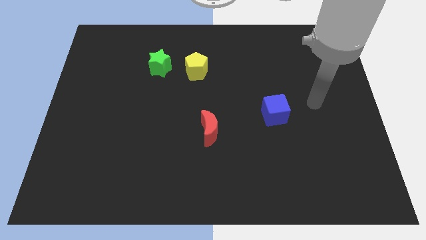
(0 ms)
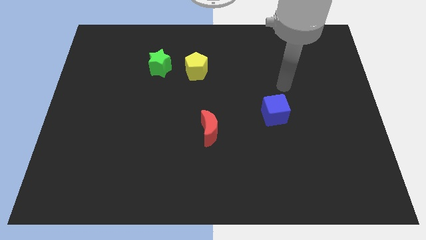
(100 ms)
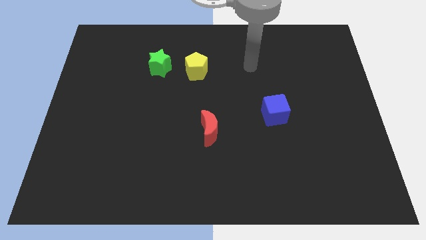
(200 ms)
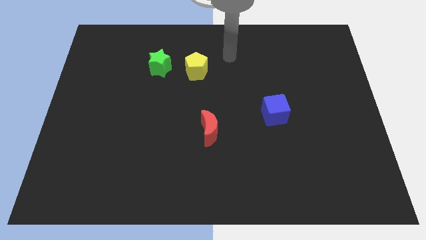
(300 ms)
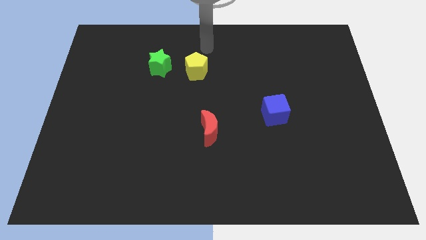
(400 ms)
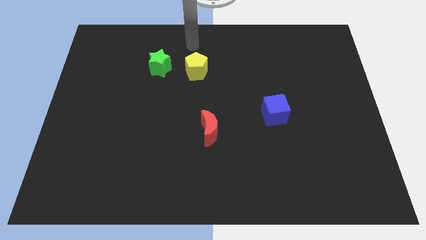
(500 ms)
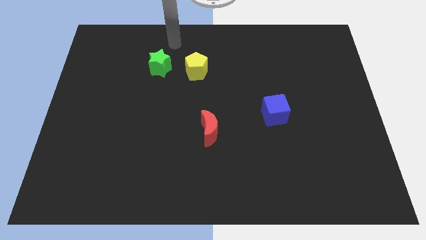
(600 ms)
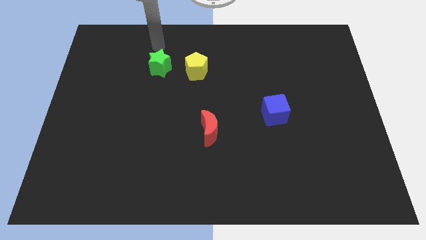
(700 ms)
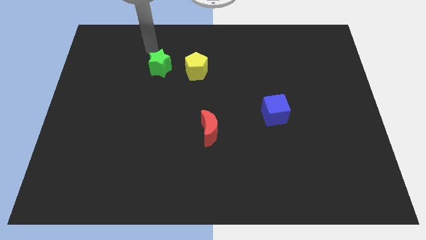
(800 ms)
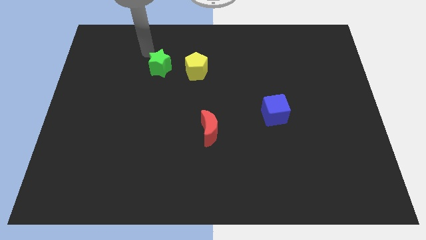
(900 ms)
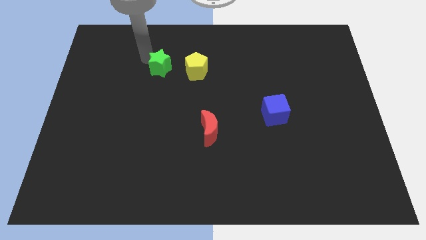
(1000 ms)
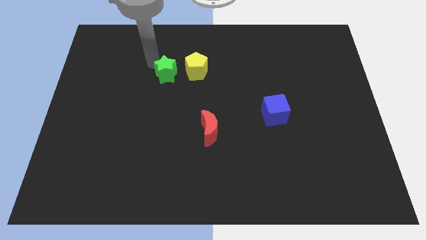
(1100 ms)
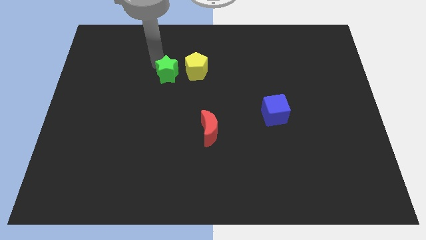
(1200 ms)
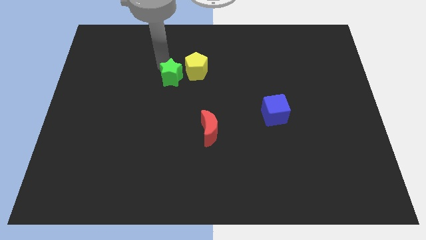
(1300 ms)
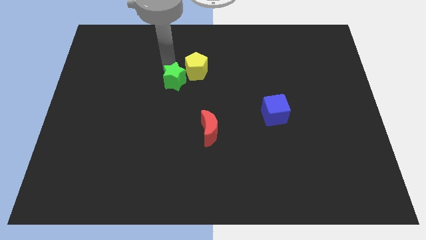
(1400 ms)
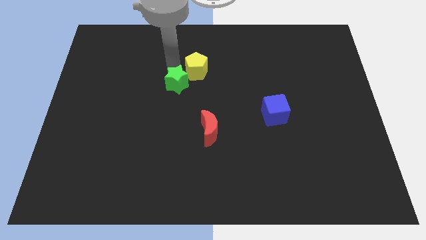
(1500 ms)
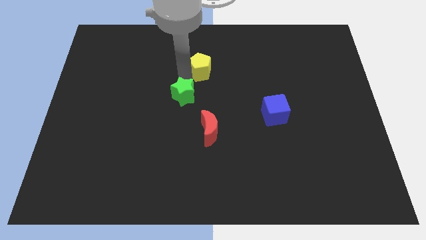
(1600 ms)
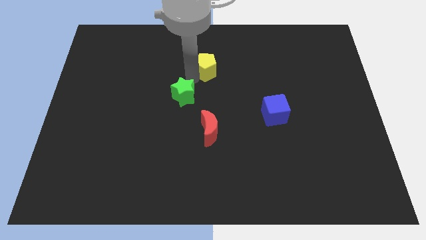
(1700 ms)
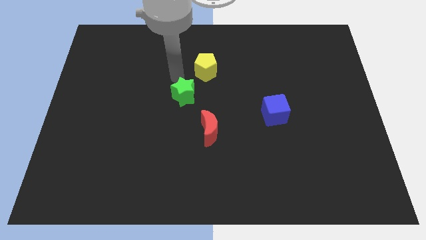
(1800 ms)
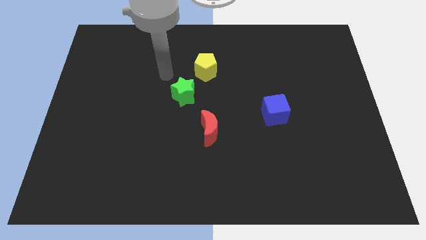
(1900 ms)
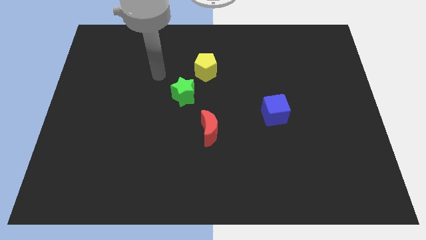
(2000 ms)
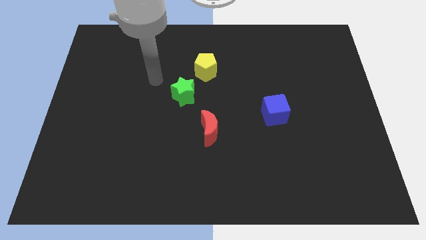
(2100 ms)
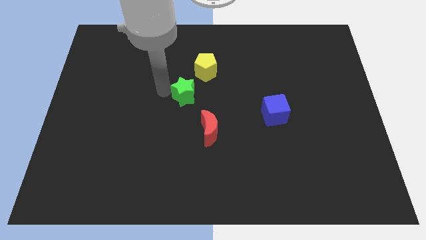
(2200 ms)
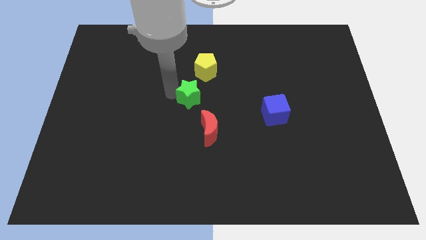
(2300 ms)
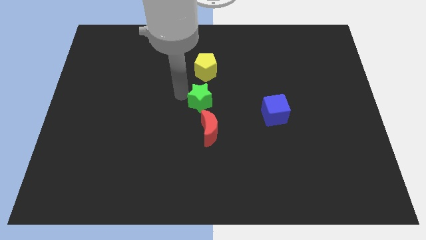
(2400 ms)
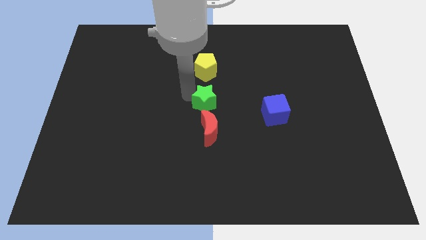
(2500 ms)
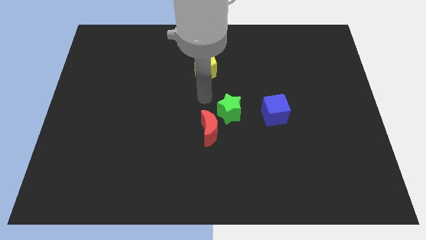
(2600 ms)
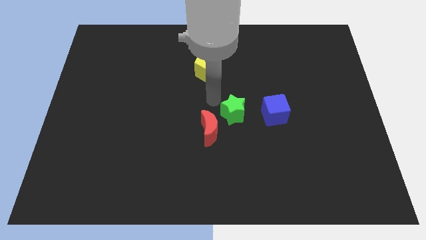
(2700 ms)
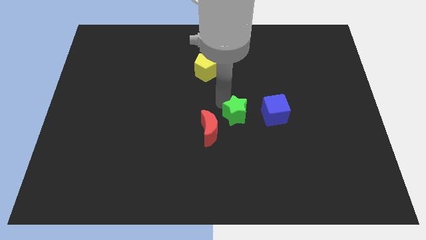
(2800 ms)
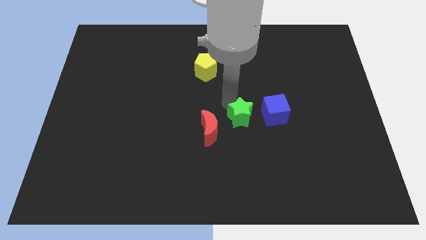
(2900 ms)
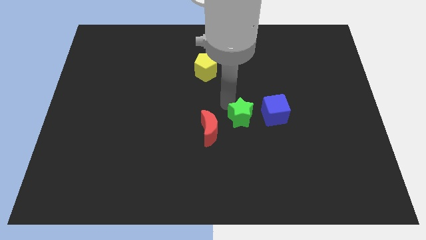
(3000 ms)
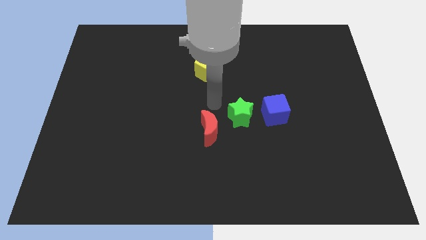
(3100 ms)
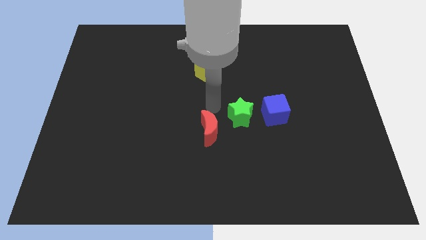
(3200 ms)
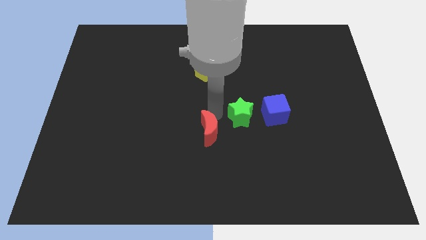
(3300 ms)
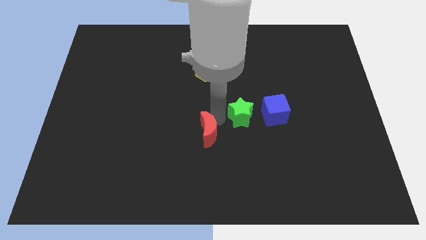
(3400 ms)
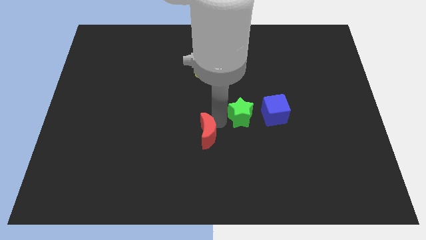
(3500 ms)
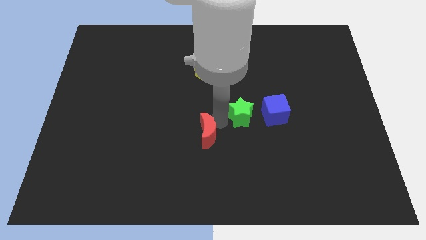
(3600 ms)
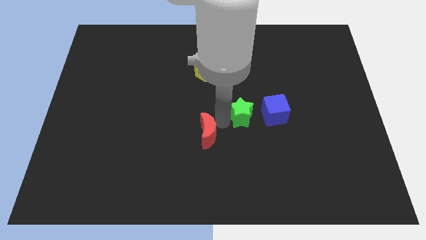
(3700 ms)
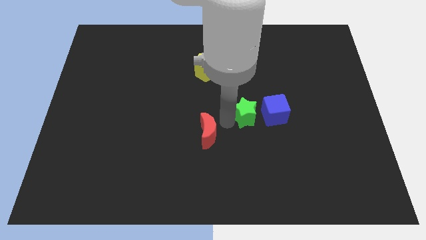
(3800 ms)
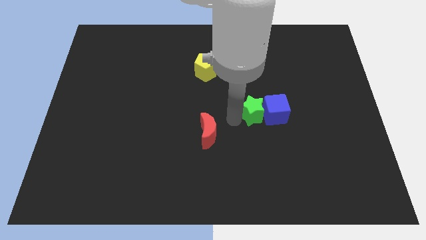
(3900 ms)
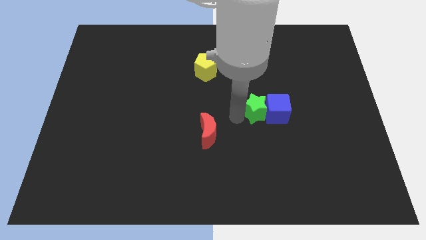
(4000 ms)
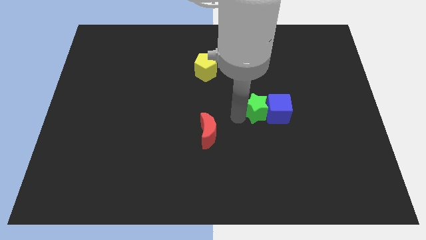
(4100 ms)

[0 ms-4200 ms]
slide the green block next to the blue cube

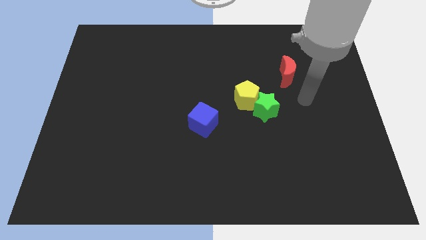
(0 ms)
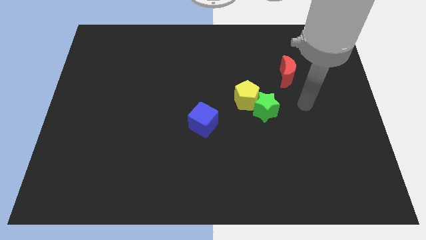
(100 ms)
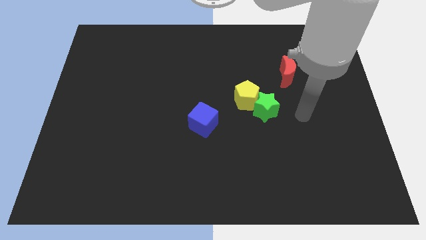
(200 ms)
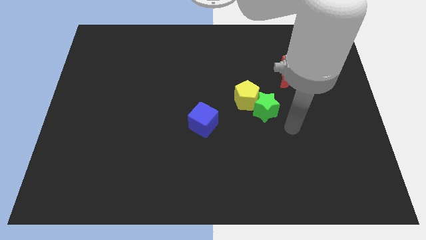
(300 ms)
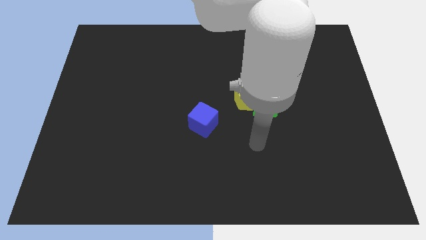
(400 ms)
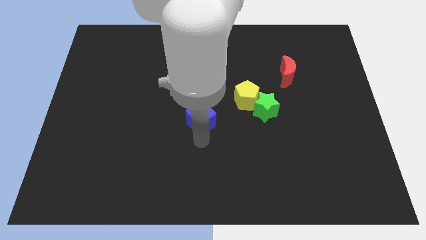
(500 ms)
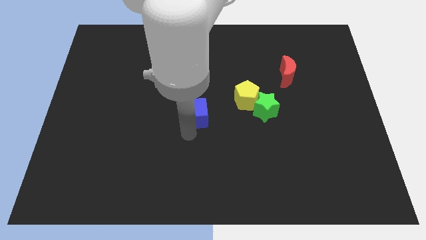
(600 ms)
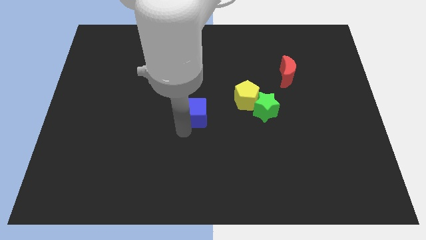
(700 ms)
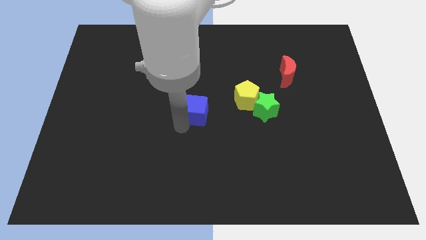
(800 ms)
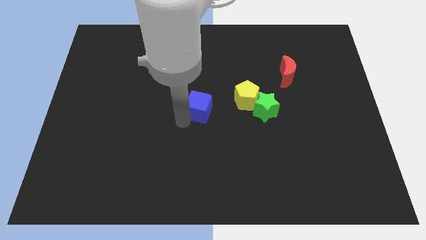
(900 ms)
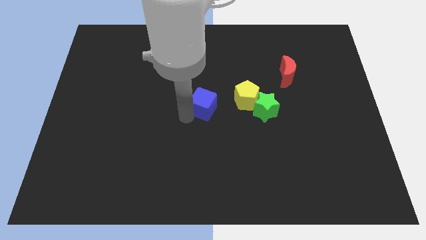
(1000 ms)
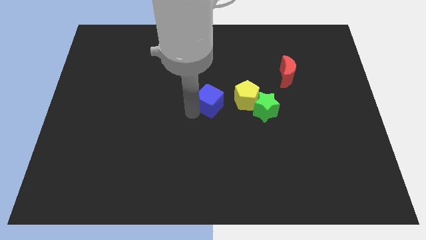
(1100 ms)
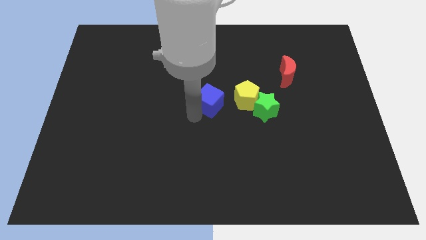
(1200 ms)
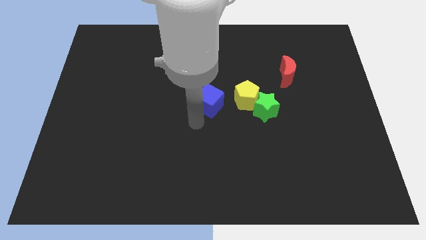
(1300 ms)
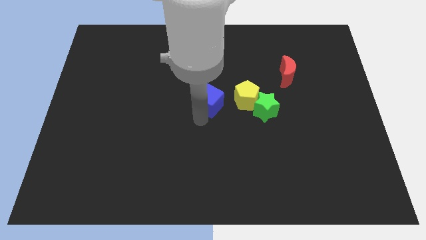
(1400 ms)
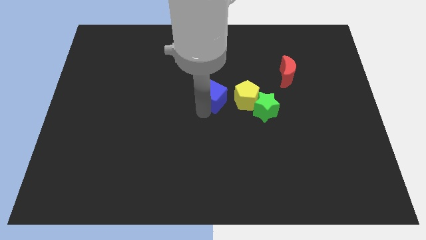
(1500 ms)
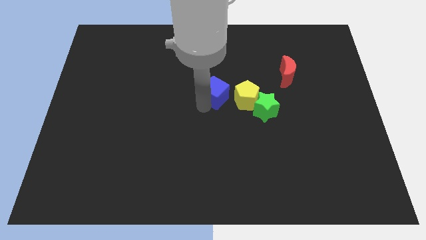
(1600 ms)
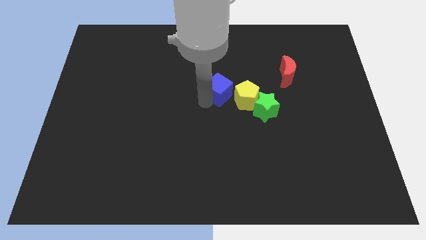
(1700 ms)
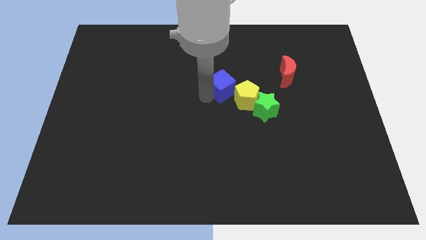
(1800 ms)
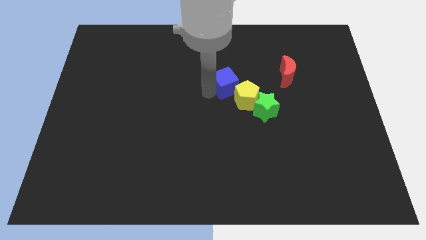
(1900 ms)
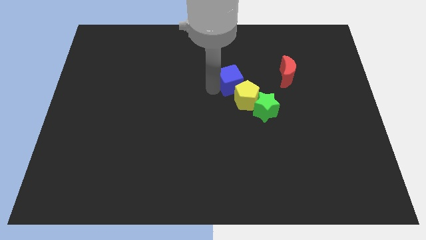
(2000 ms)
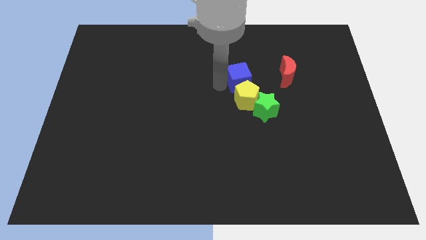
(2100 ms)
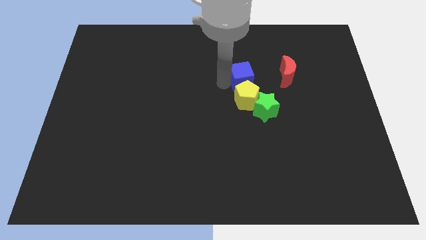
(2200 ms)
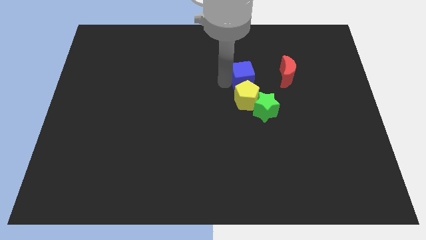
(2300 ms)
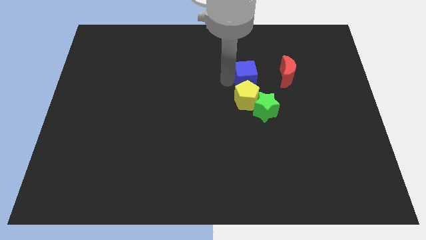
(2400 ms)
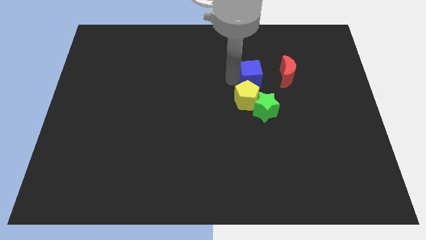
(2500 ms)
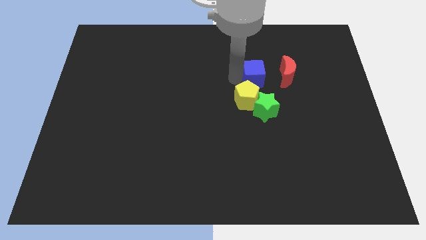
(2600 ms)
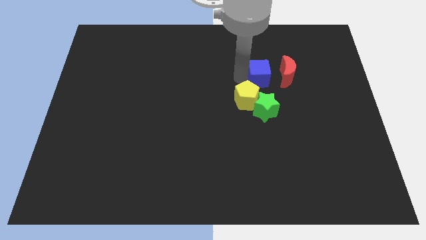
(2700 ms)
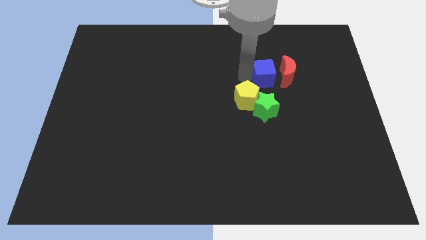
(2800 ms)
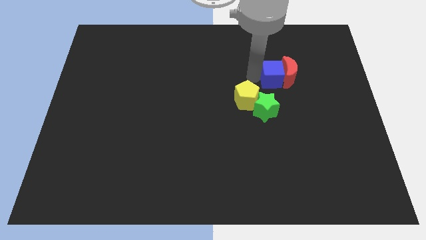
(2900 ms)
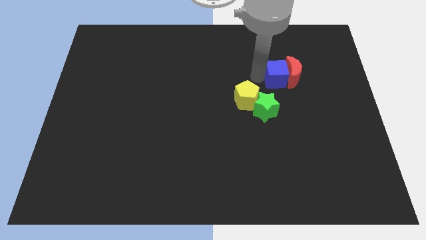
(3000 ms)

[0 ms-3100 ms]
move the blue cube next to the red block

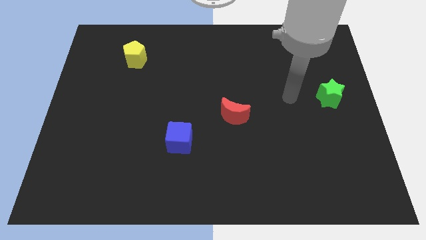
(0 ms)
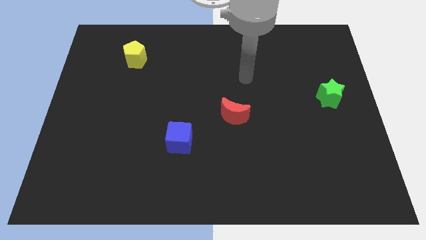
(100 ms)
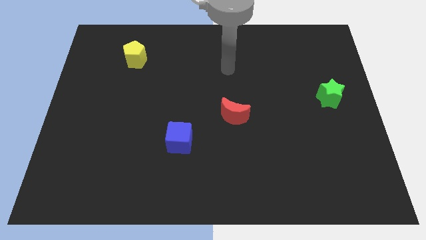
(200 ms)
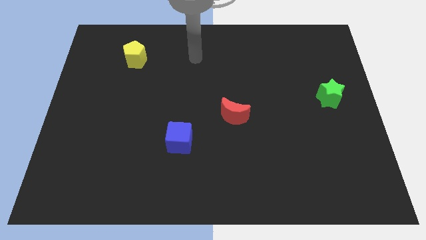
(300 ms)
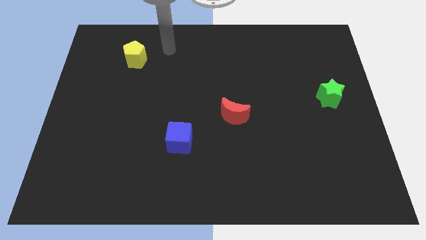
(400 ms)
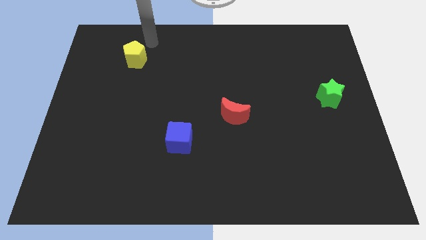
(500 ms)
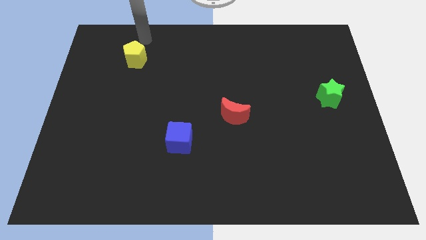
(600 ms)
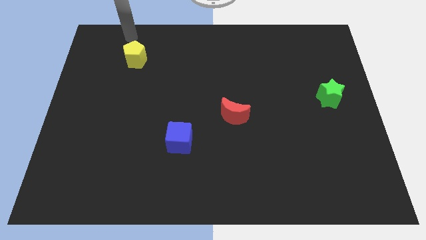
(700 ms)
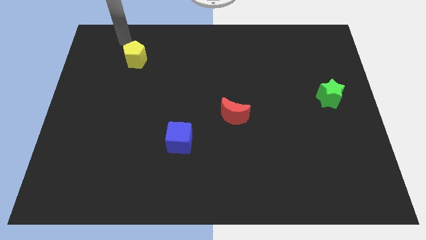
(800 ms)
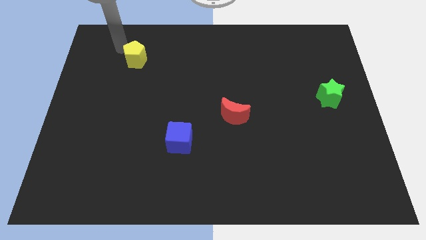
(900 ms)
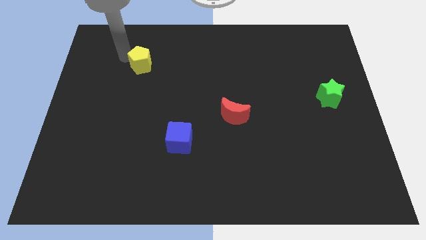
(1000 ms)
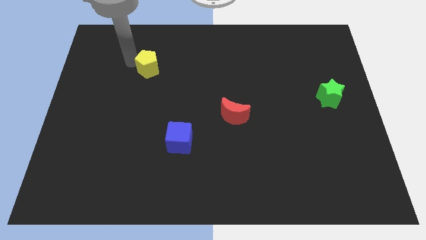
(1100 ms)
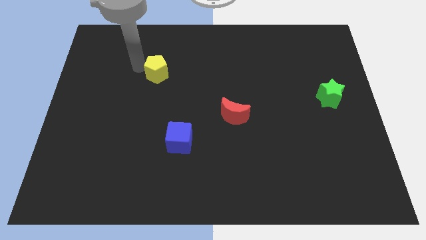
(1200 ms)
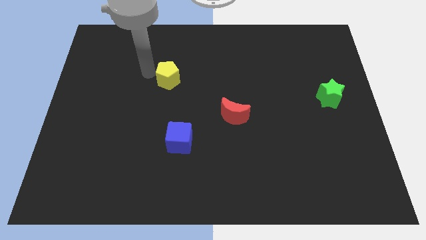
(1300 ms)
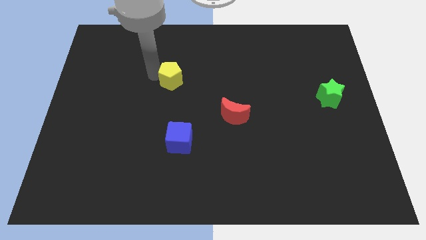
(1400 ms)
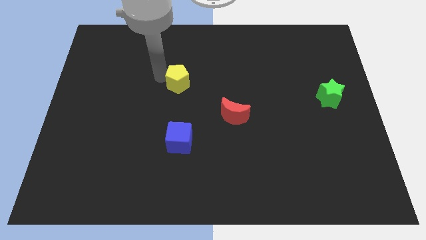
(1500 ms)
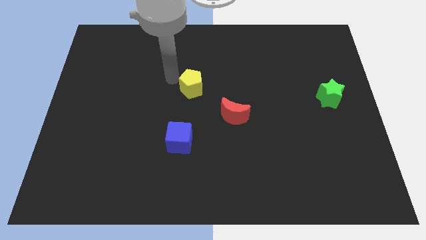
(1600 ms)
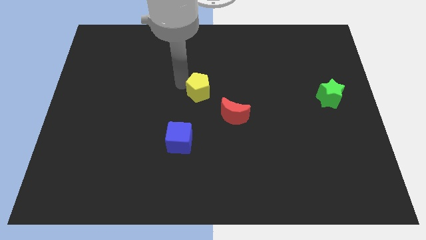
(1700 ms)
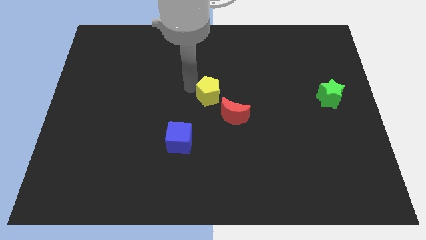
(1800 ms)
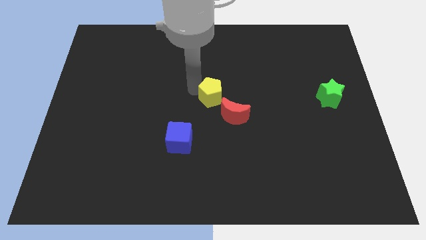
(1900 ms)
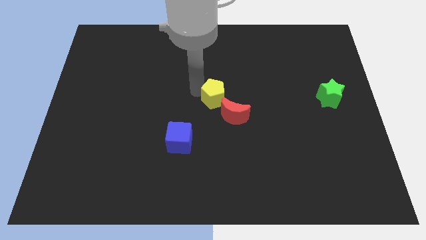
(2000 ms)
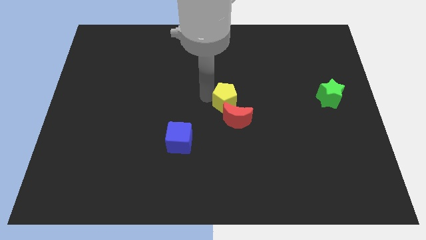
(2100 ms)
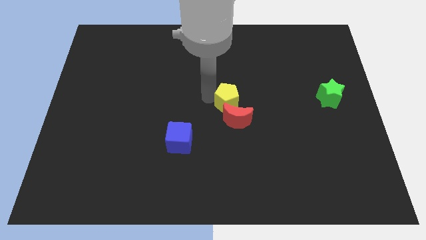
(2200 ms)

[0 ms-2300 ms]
put the yellow block towards the moon
